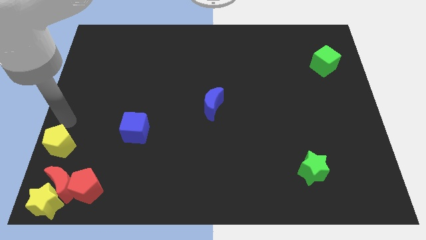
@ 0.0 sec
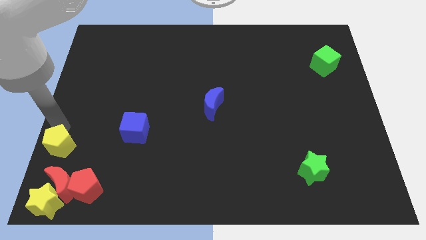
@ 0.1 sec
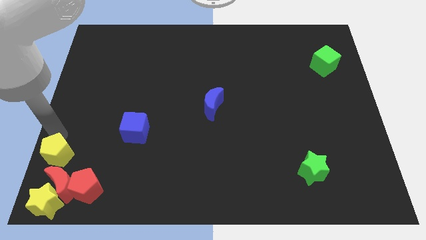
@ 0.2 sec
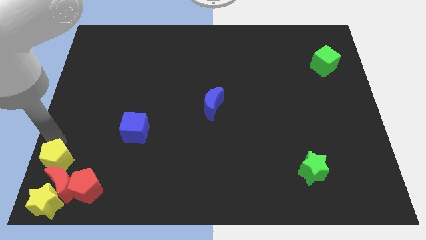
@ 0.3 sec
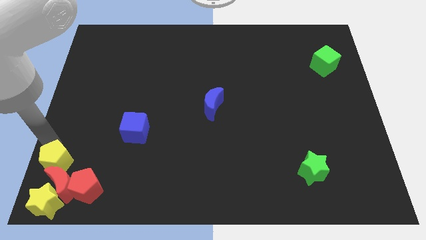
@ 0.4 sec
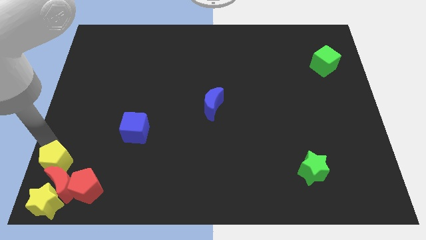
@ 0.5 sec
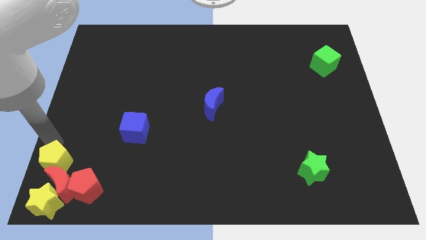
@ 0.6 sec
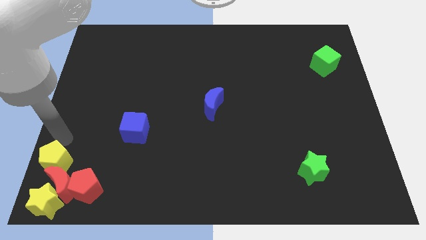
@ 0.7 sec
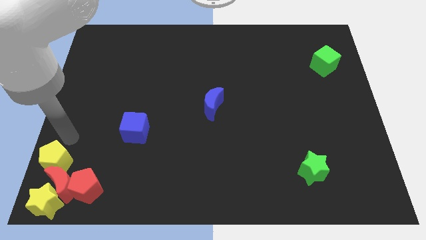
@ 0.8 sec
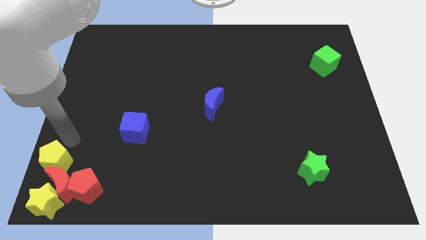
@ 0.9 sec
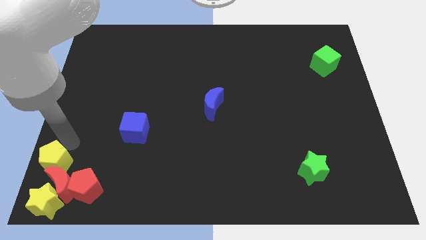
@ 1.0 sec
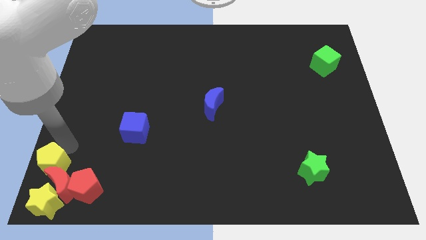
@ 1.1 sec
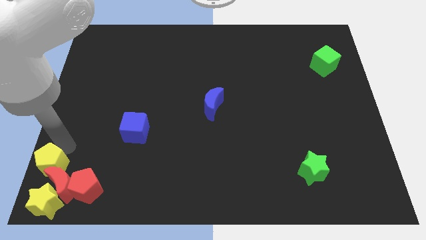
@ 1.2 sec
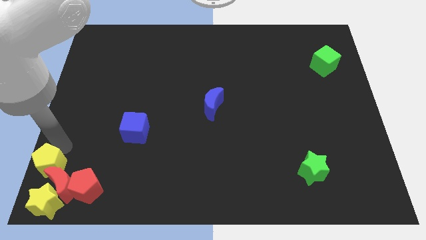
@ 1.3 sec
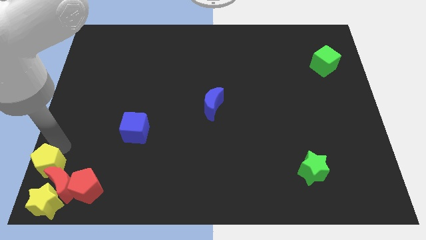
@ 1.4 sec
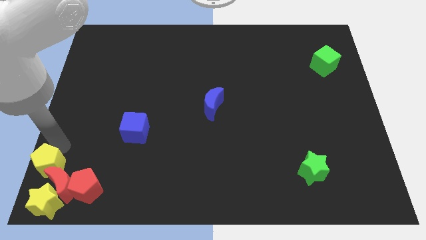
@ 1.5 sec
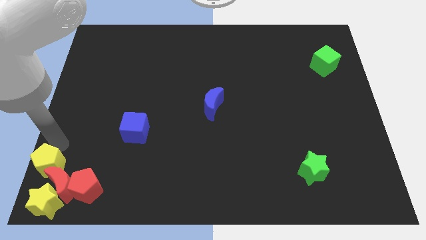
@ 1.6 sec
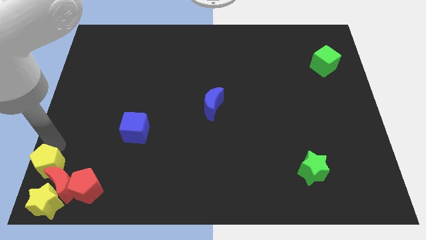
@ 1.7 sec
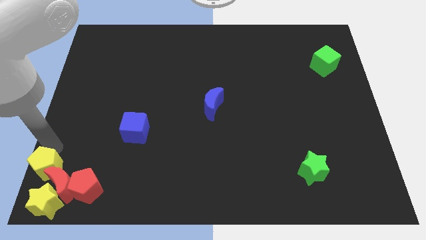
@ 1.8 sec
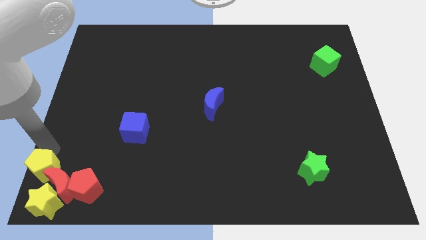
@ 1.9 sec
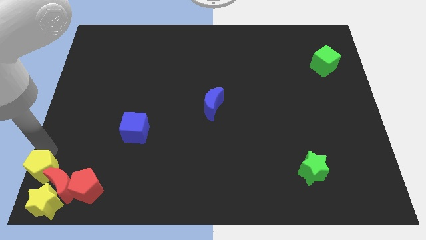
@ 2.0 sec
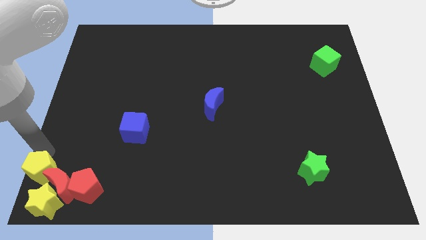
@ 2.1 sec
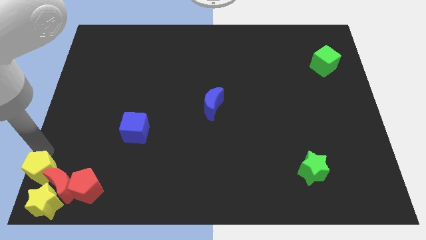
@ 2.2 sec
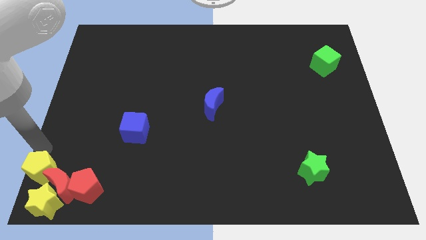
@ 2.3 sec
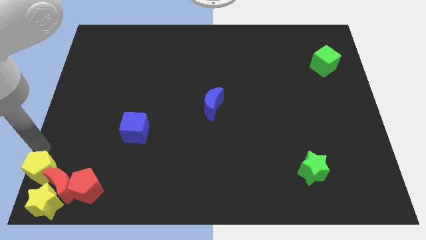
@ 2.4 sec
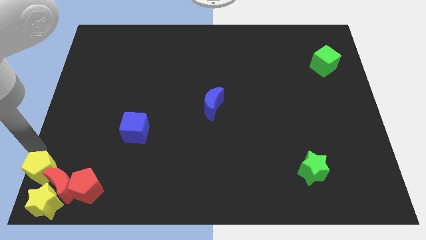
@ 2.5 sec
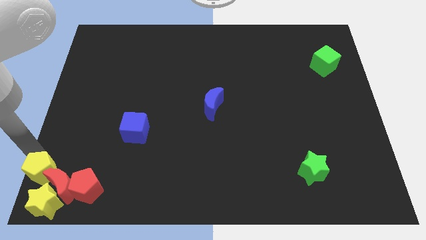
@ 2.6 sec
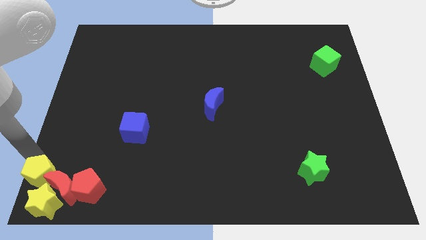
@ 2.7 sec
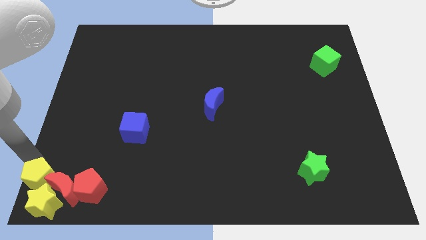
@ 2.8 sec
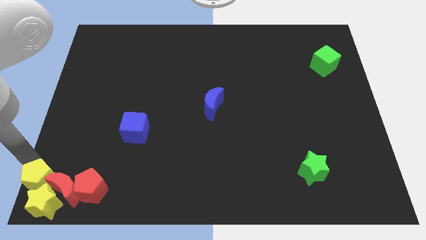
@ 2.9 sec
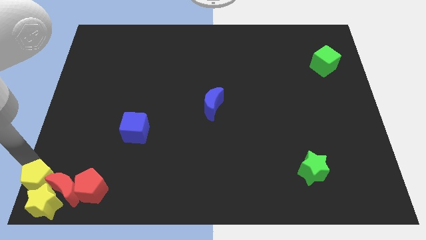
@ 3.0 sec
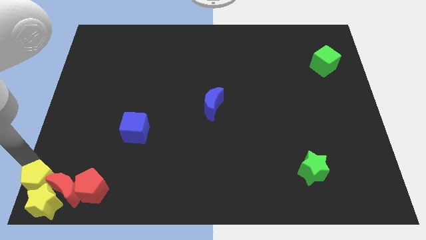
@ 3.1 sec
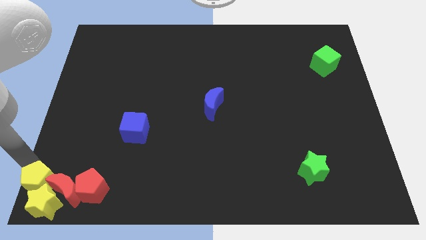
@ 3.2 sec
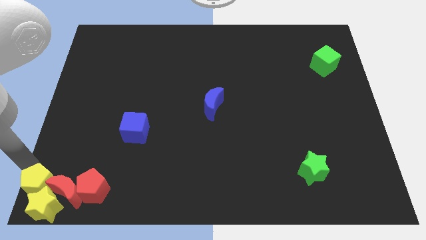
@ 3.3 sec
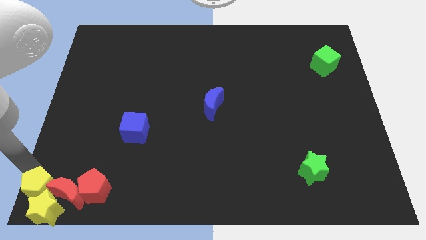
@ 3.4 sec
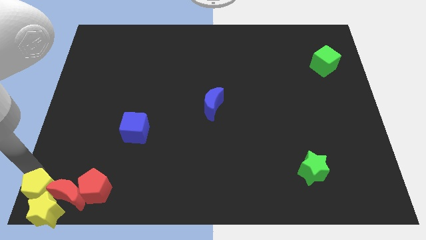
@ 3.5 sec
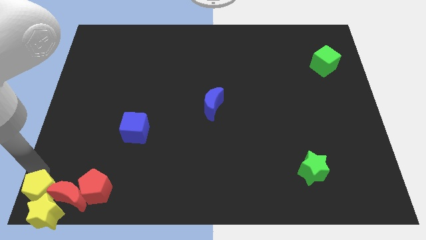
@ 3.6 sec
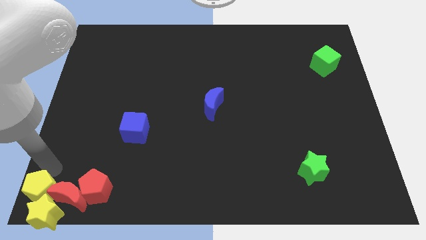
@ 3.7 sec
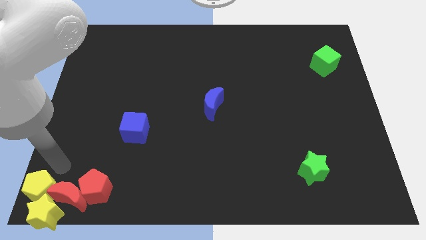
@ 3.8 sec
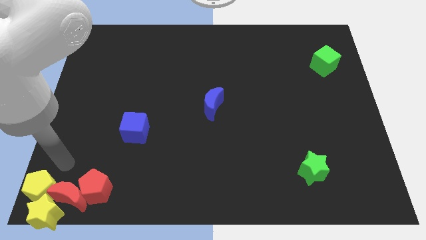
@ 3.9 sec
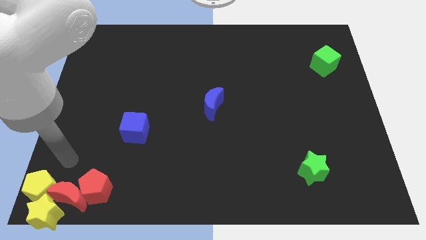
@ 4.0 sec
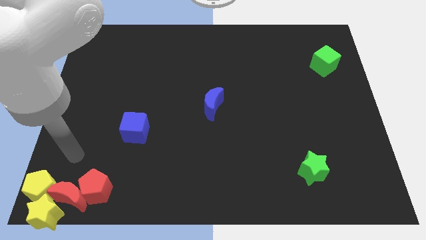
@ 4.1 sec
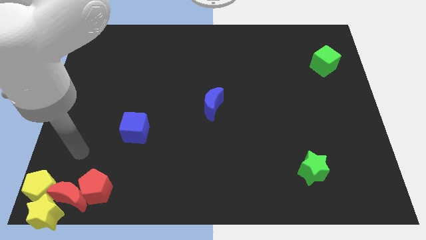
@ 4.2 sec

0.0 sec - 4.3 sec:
move yellow pentagon into yellow star

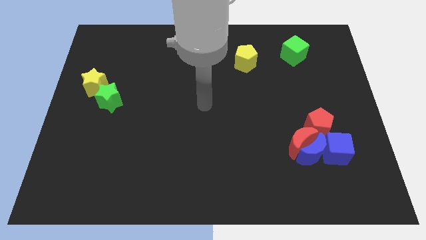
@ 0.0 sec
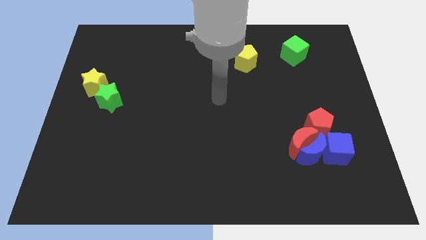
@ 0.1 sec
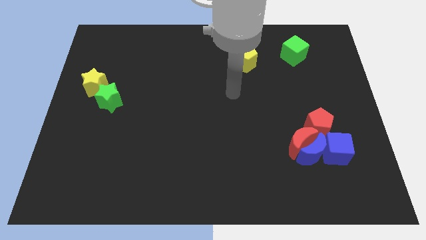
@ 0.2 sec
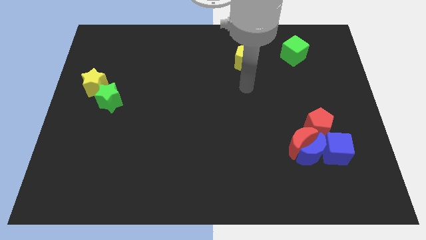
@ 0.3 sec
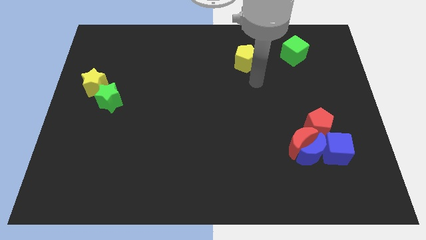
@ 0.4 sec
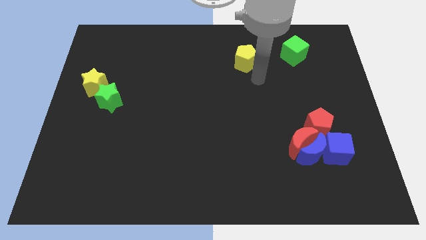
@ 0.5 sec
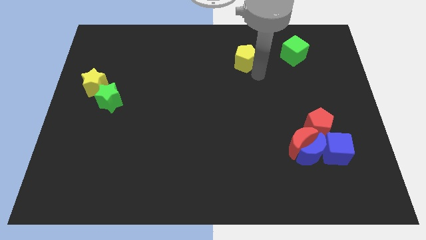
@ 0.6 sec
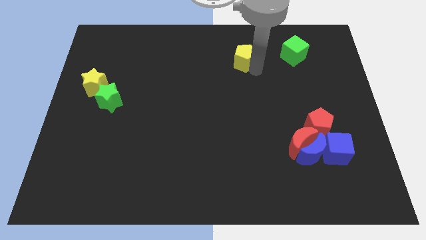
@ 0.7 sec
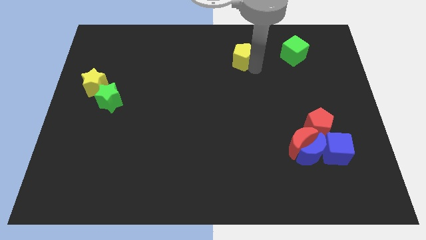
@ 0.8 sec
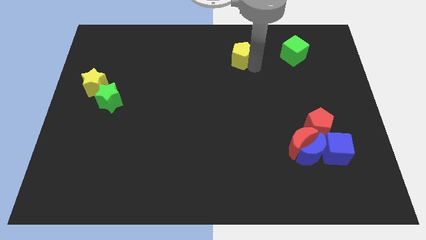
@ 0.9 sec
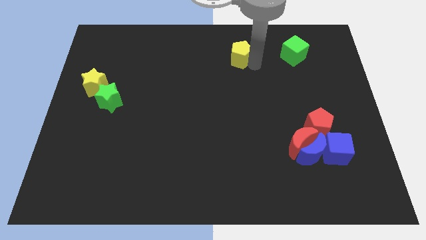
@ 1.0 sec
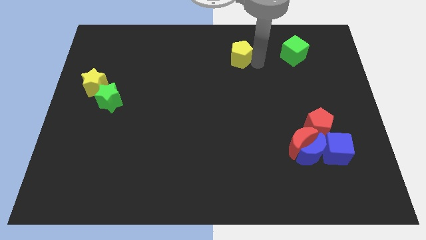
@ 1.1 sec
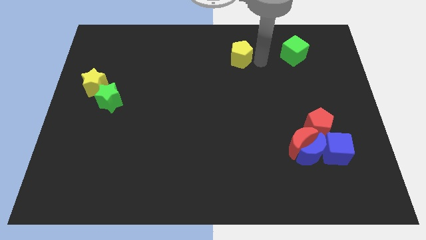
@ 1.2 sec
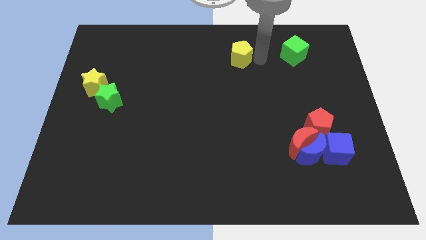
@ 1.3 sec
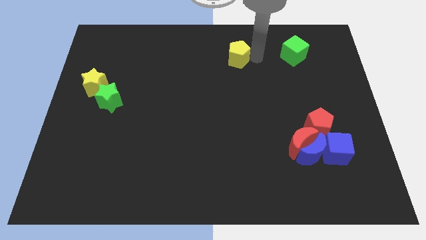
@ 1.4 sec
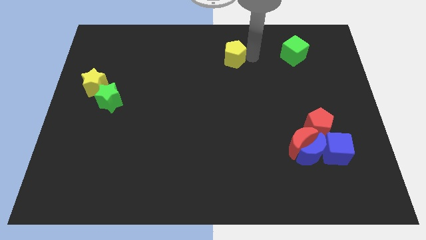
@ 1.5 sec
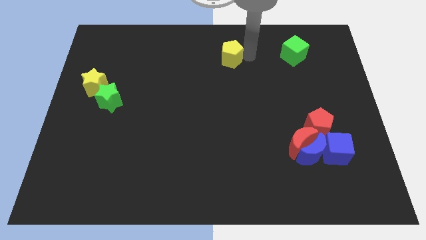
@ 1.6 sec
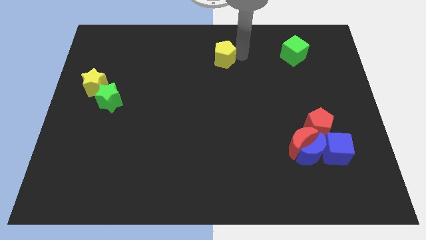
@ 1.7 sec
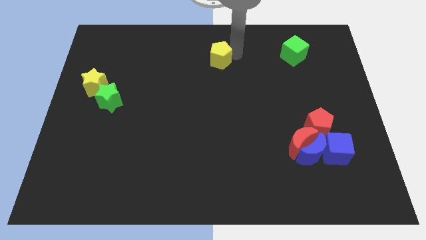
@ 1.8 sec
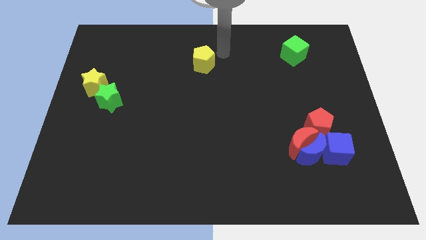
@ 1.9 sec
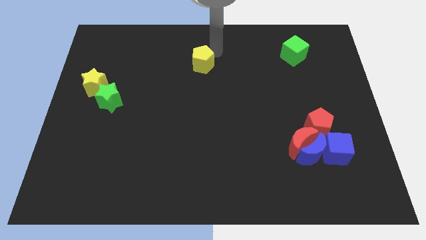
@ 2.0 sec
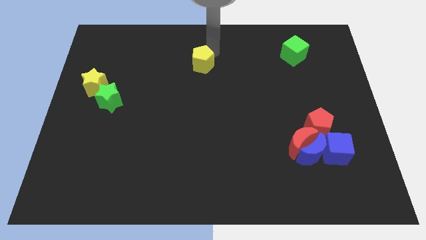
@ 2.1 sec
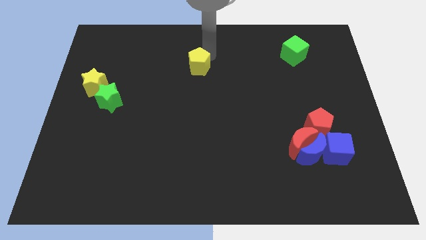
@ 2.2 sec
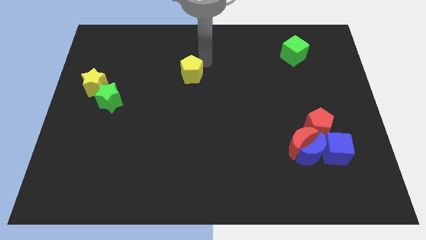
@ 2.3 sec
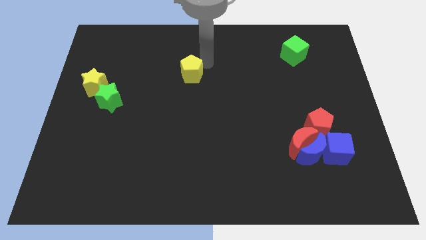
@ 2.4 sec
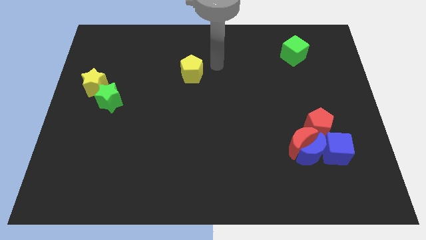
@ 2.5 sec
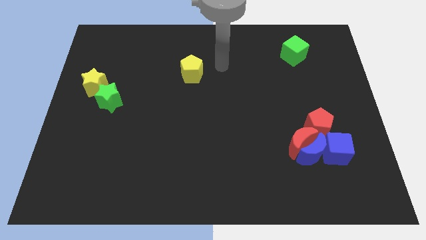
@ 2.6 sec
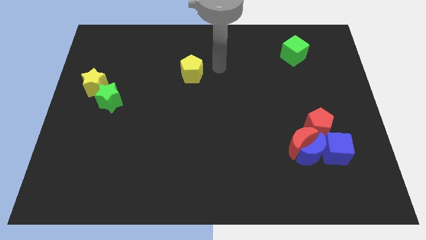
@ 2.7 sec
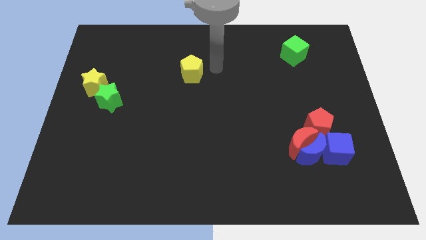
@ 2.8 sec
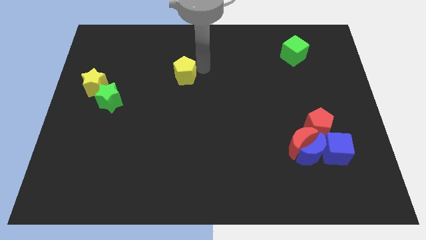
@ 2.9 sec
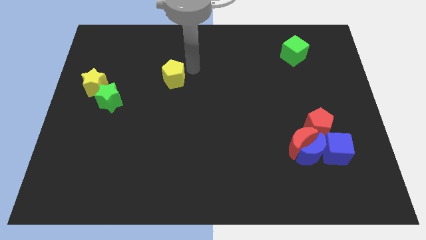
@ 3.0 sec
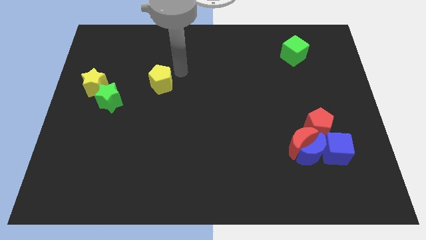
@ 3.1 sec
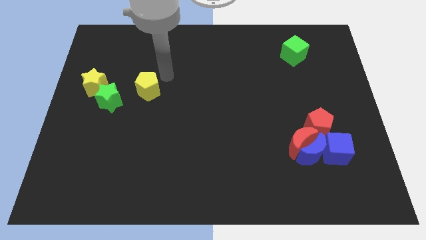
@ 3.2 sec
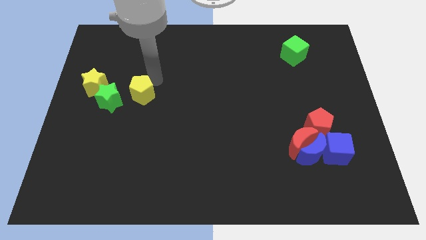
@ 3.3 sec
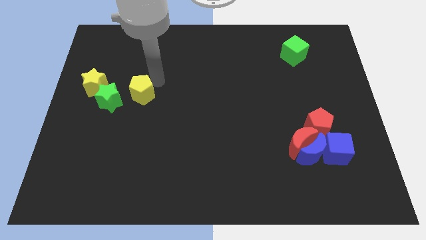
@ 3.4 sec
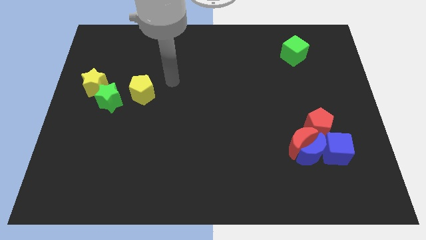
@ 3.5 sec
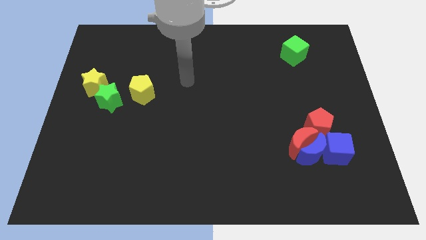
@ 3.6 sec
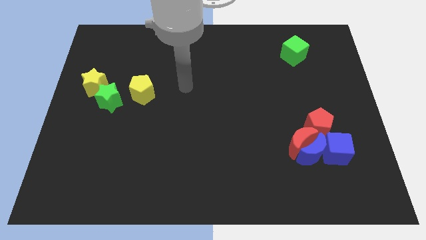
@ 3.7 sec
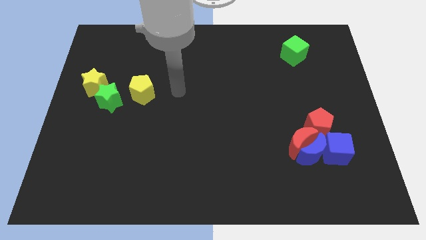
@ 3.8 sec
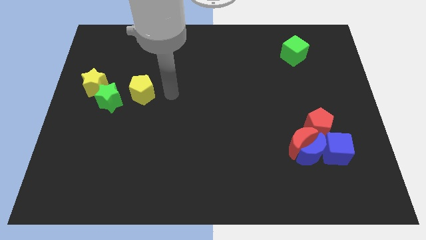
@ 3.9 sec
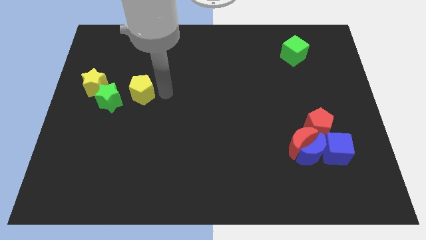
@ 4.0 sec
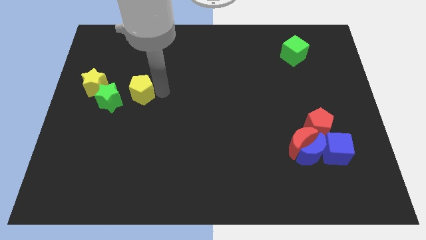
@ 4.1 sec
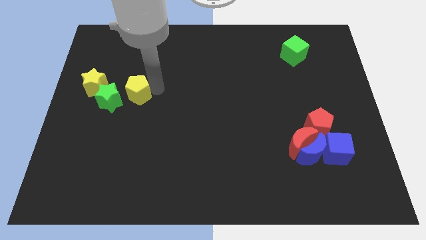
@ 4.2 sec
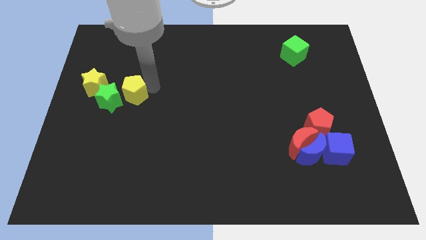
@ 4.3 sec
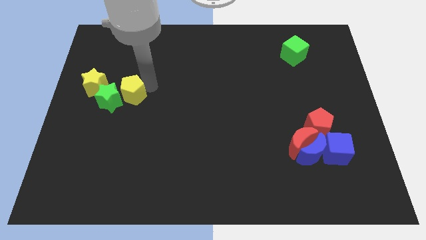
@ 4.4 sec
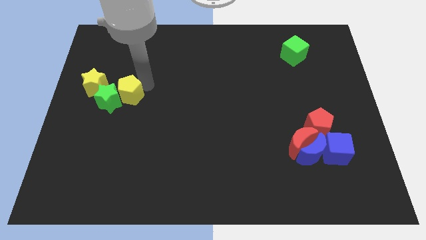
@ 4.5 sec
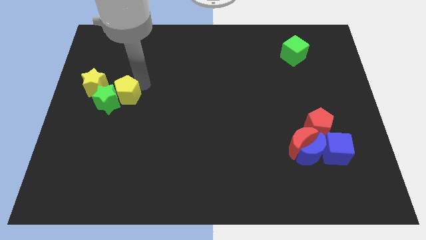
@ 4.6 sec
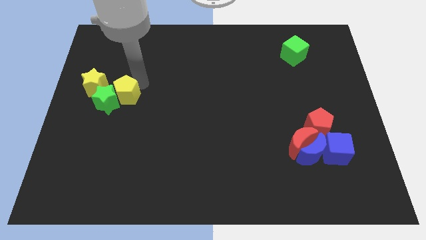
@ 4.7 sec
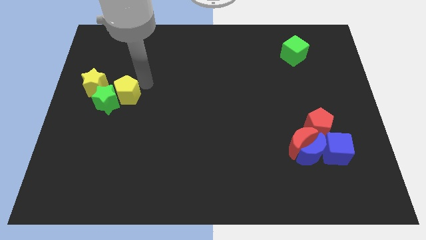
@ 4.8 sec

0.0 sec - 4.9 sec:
drag the yellow pentagon into the green star
